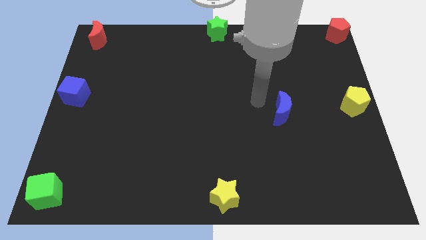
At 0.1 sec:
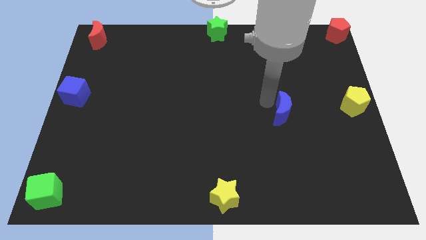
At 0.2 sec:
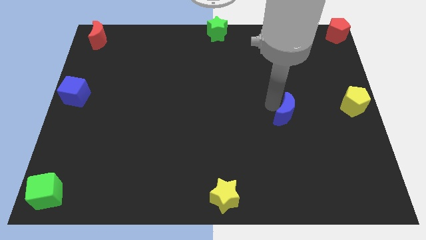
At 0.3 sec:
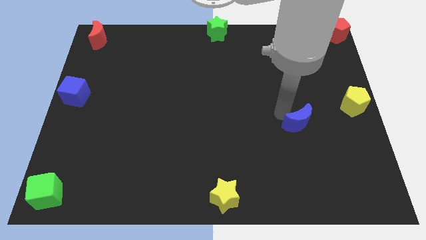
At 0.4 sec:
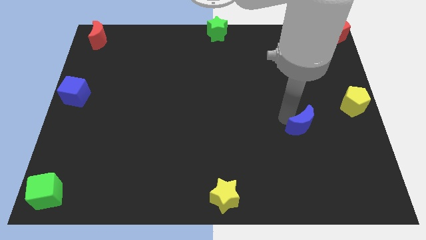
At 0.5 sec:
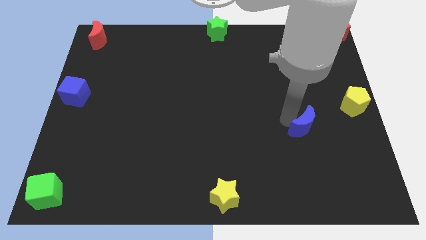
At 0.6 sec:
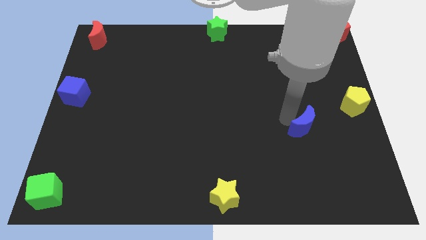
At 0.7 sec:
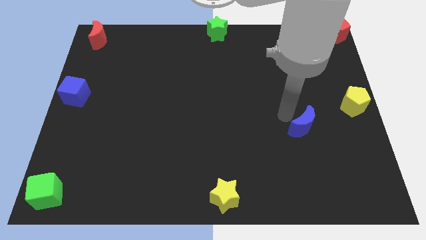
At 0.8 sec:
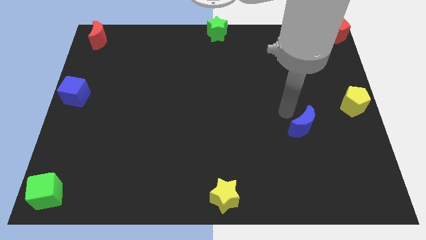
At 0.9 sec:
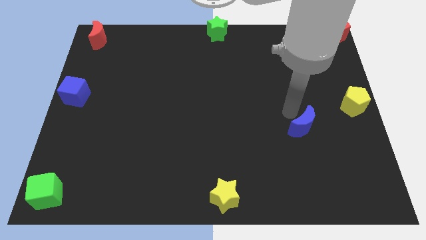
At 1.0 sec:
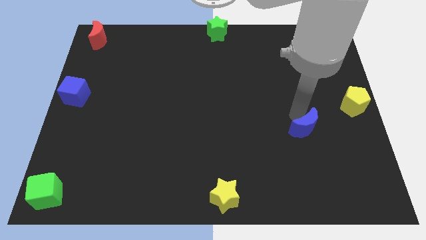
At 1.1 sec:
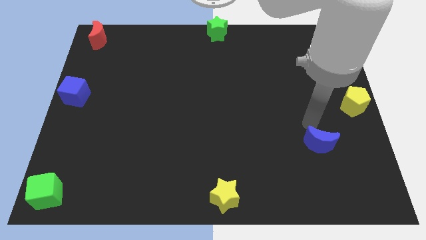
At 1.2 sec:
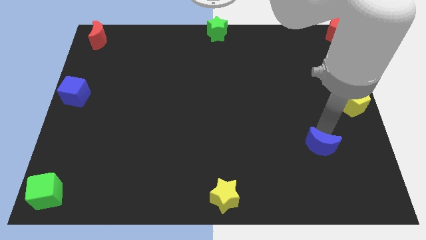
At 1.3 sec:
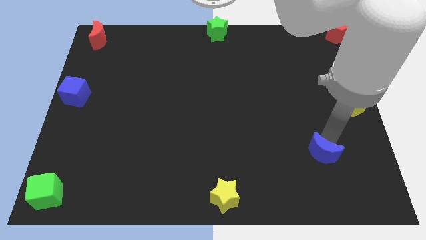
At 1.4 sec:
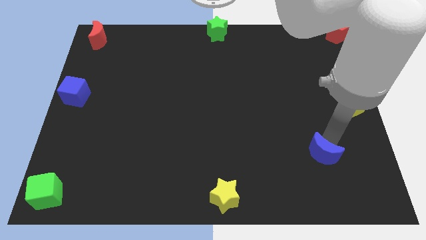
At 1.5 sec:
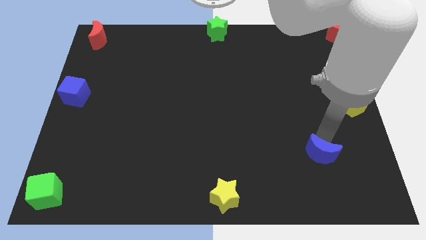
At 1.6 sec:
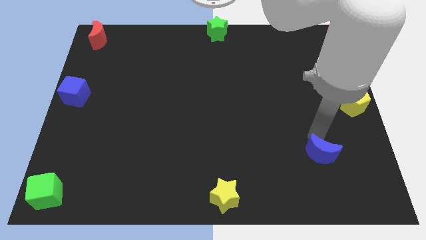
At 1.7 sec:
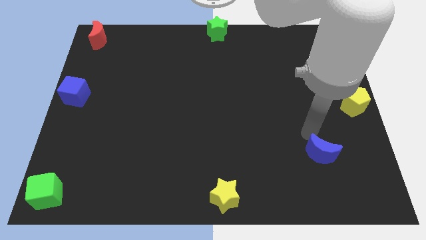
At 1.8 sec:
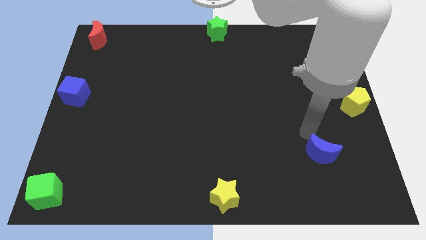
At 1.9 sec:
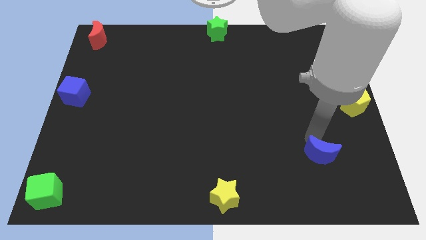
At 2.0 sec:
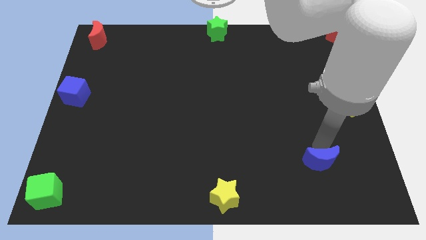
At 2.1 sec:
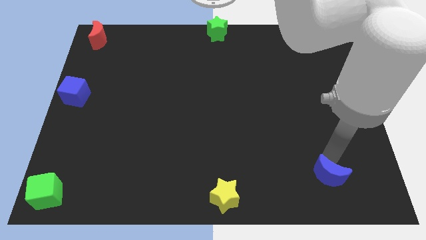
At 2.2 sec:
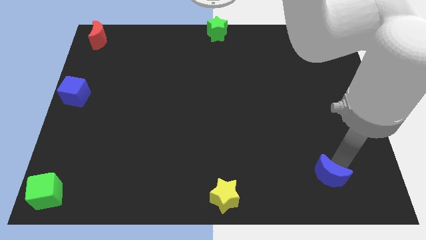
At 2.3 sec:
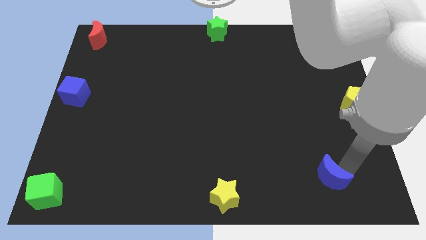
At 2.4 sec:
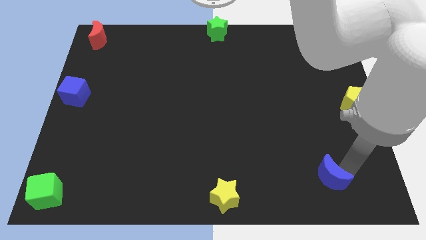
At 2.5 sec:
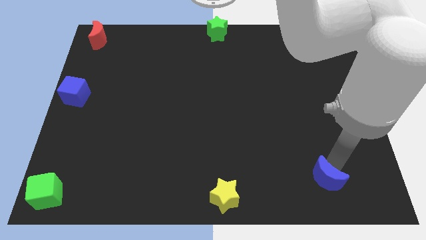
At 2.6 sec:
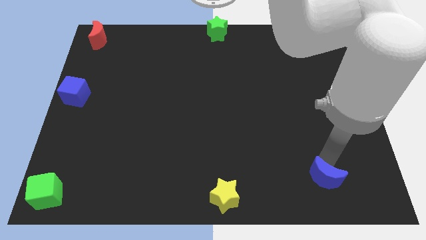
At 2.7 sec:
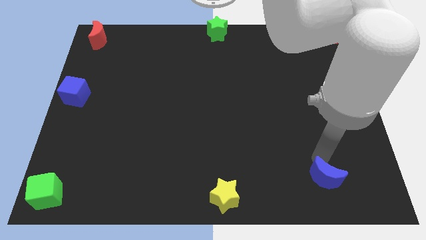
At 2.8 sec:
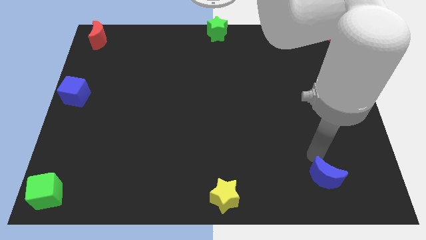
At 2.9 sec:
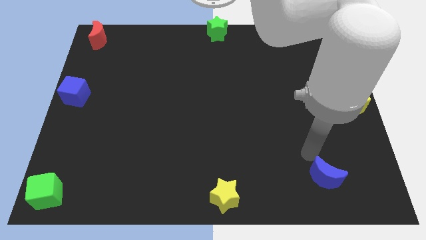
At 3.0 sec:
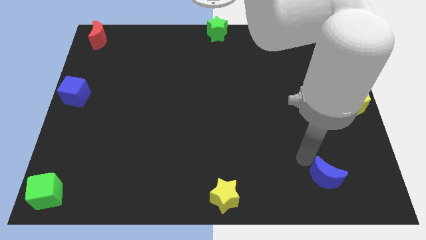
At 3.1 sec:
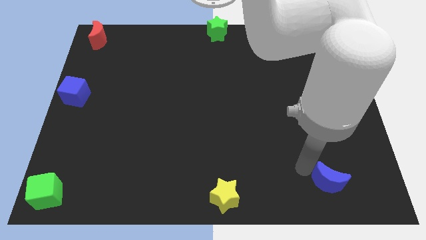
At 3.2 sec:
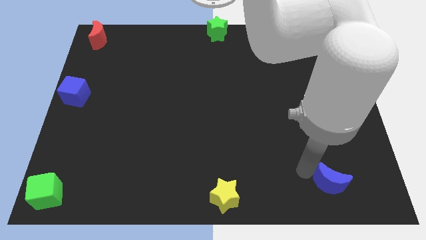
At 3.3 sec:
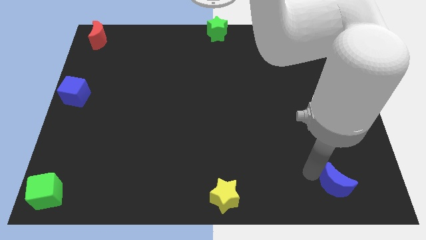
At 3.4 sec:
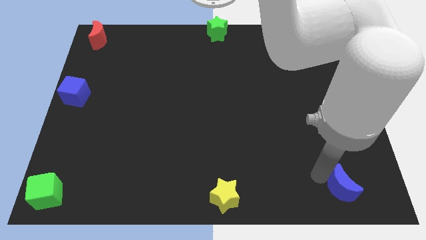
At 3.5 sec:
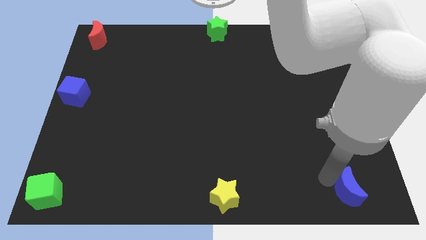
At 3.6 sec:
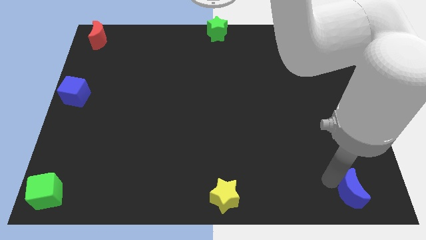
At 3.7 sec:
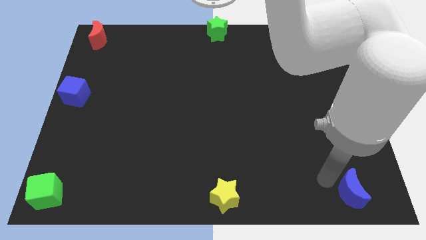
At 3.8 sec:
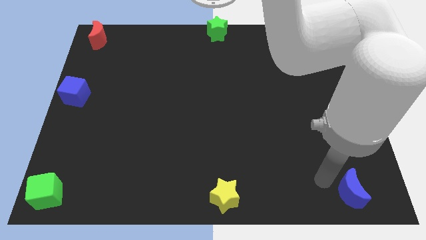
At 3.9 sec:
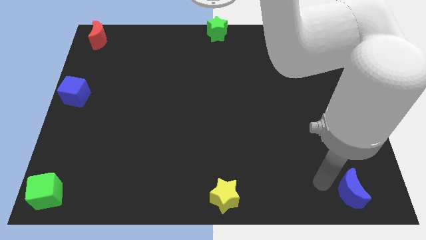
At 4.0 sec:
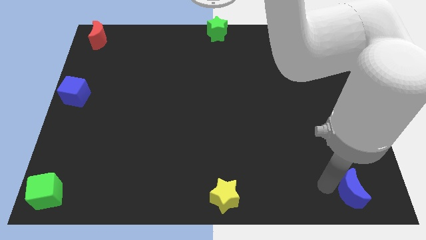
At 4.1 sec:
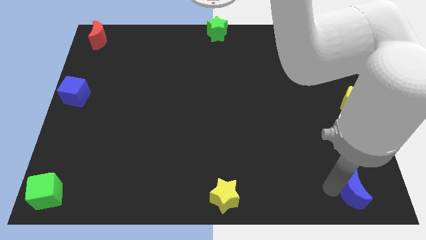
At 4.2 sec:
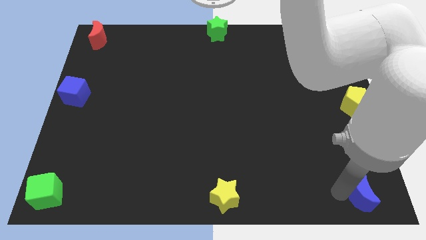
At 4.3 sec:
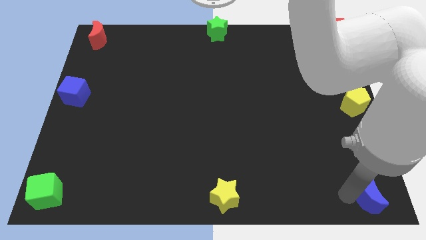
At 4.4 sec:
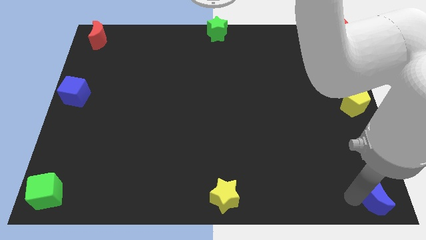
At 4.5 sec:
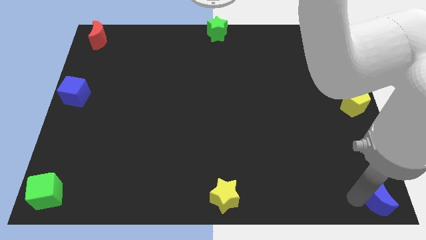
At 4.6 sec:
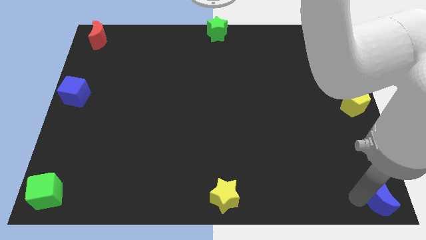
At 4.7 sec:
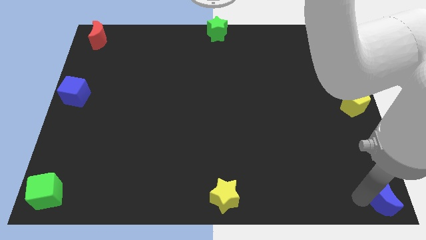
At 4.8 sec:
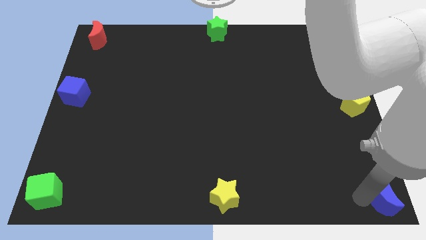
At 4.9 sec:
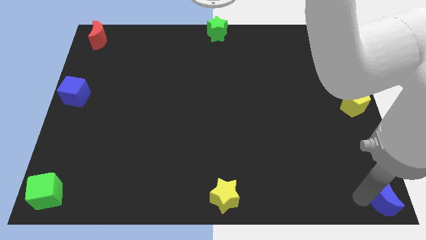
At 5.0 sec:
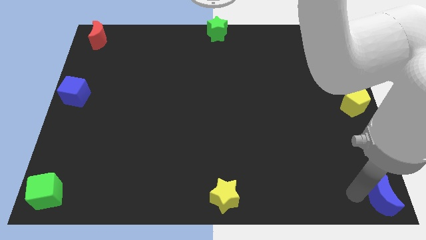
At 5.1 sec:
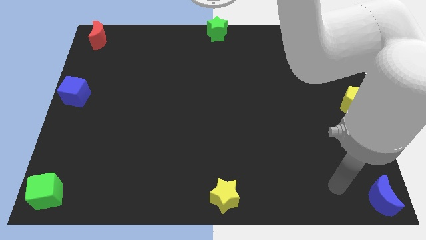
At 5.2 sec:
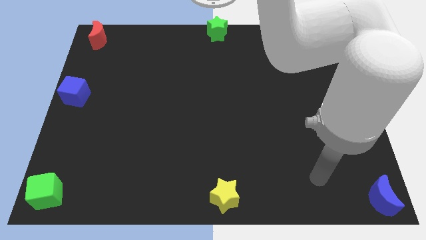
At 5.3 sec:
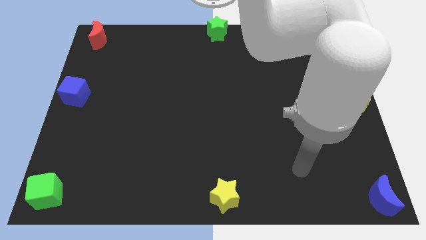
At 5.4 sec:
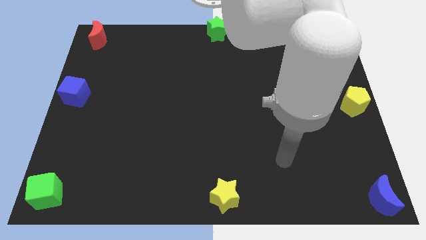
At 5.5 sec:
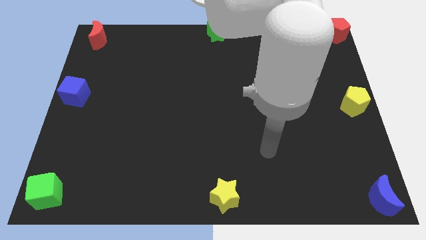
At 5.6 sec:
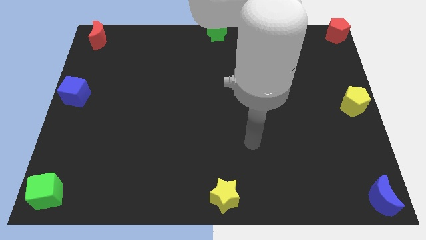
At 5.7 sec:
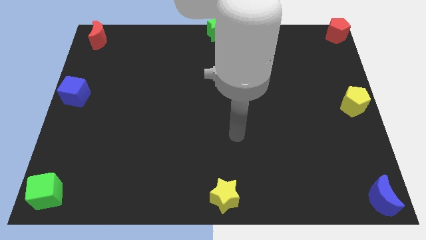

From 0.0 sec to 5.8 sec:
push the blue crescent to the bottom right of the board

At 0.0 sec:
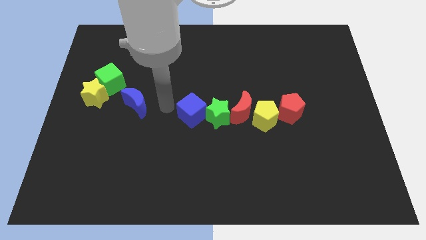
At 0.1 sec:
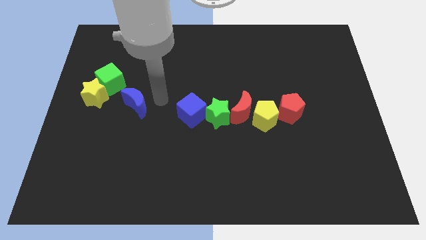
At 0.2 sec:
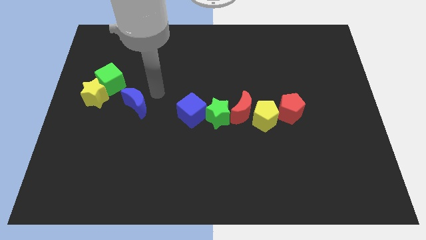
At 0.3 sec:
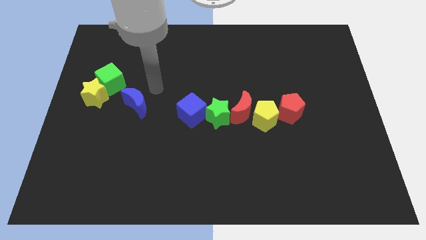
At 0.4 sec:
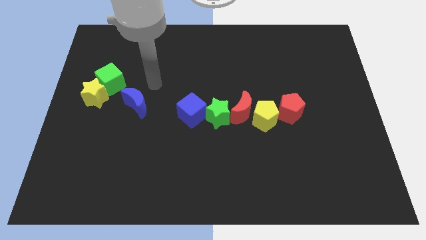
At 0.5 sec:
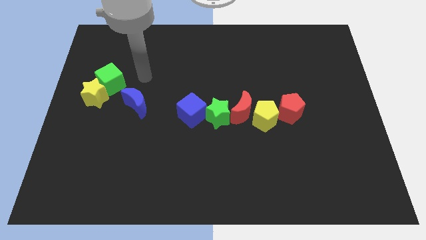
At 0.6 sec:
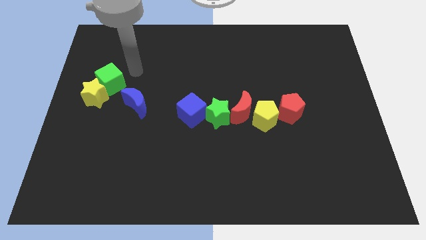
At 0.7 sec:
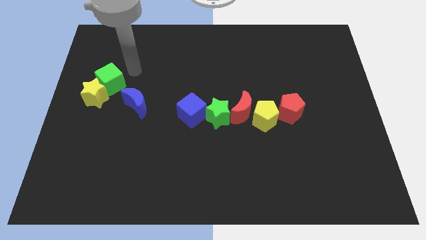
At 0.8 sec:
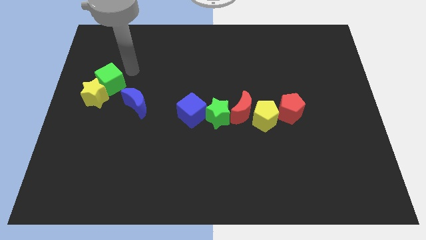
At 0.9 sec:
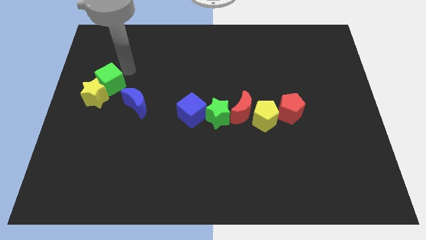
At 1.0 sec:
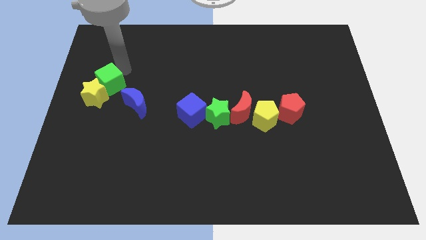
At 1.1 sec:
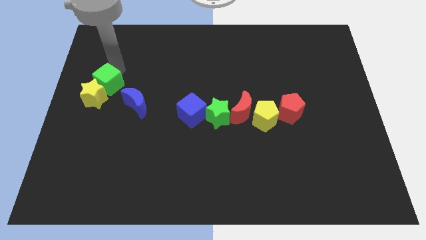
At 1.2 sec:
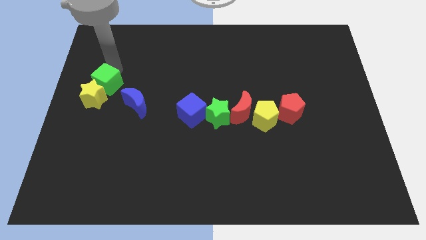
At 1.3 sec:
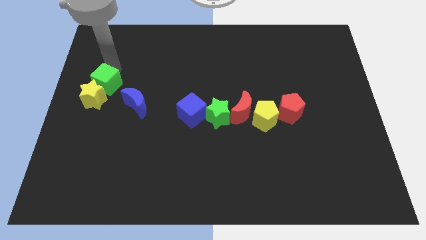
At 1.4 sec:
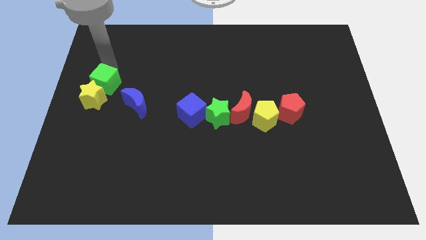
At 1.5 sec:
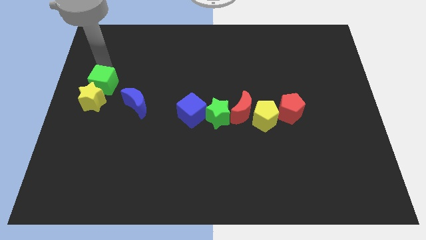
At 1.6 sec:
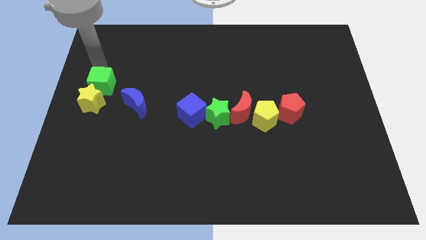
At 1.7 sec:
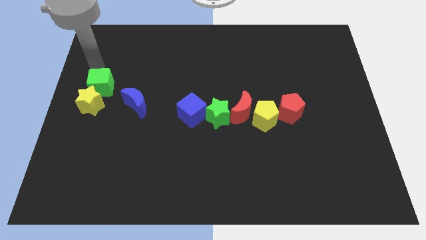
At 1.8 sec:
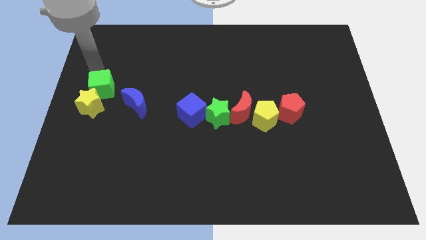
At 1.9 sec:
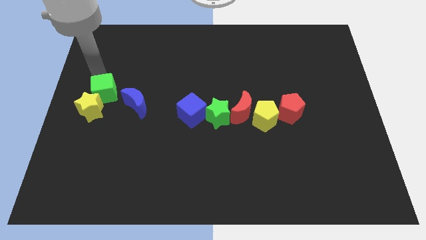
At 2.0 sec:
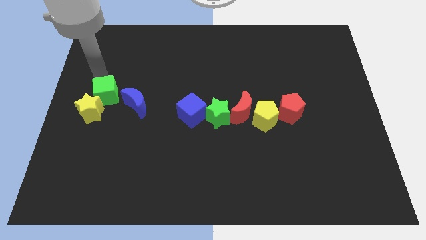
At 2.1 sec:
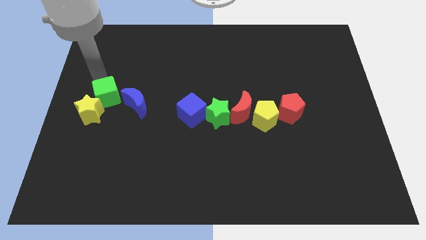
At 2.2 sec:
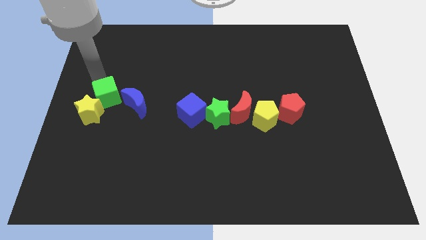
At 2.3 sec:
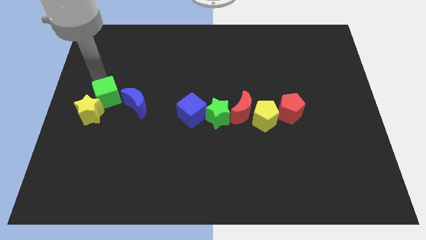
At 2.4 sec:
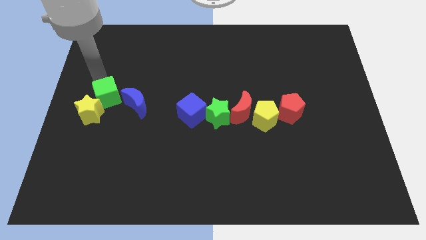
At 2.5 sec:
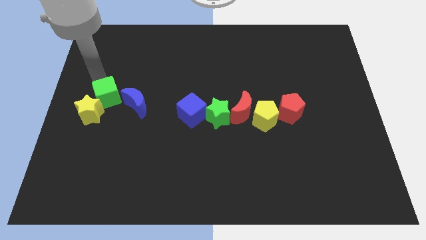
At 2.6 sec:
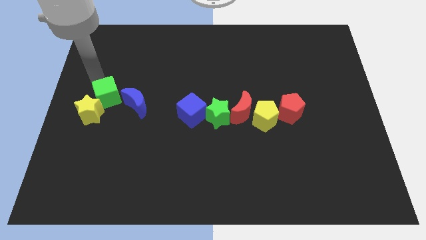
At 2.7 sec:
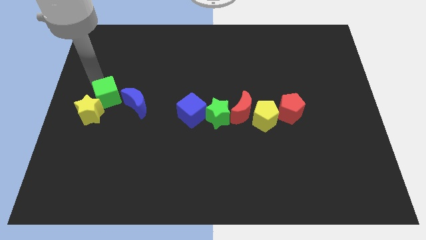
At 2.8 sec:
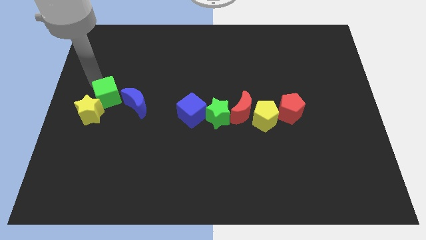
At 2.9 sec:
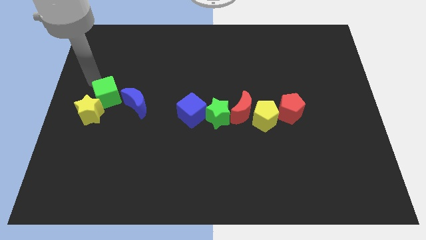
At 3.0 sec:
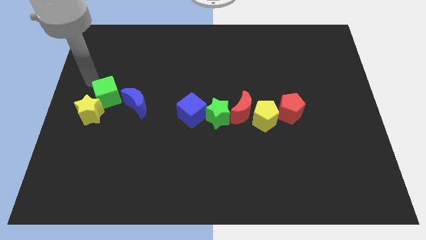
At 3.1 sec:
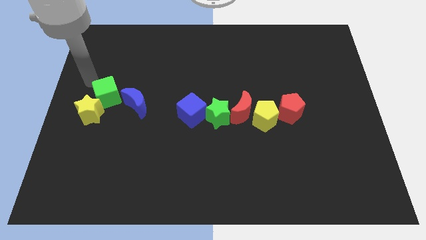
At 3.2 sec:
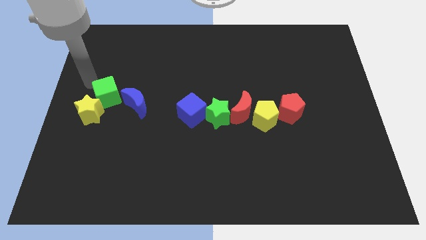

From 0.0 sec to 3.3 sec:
push the green cube into the yellow star
